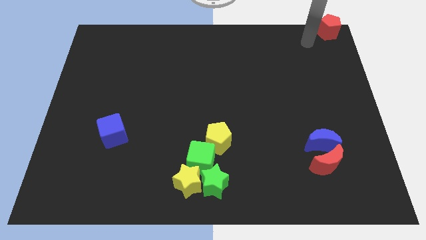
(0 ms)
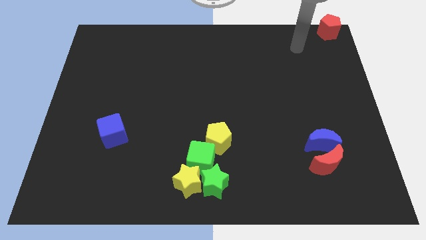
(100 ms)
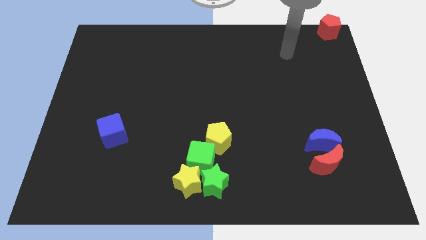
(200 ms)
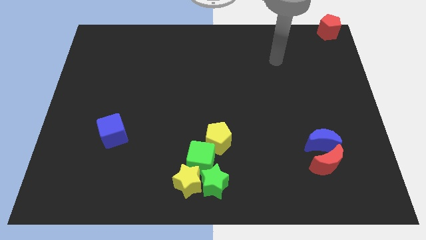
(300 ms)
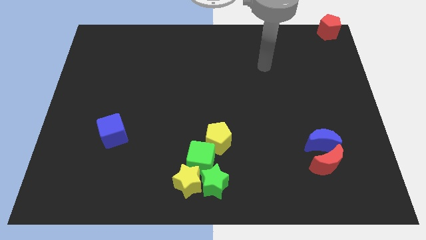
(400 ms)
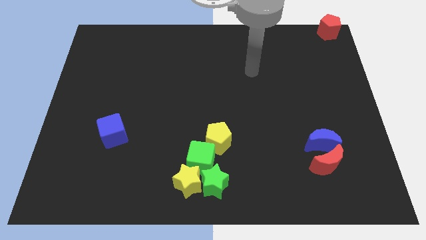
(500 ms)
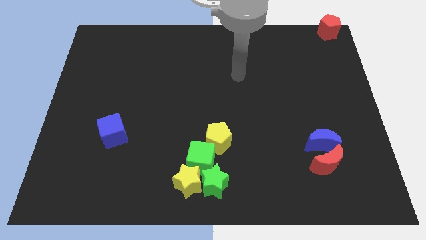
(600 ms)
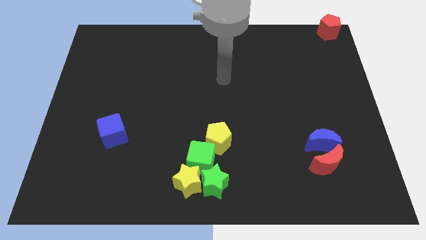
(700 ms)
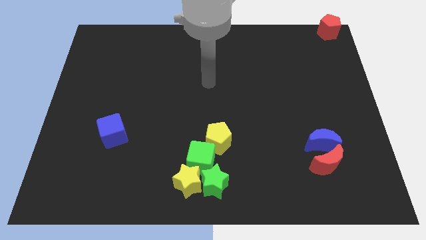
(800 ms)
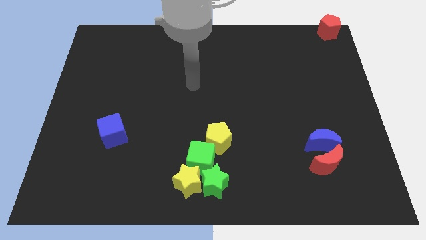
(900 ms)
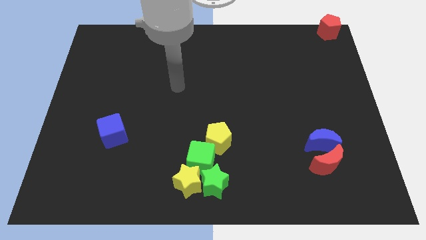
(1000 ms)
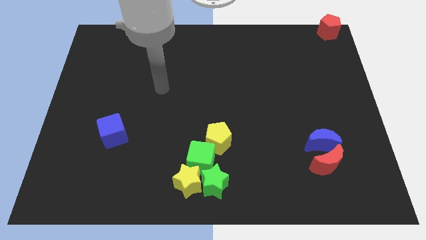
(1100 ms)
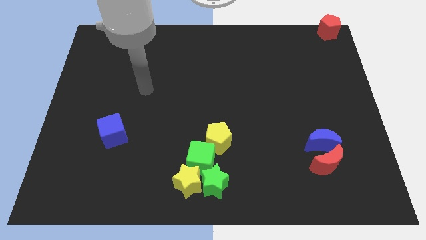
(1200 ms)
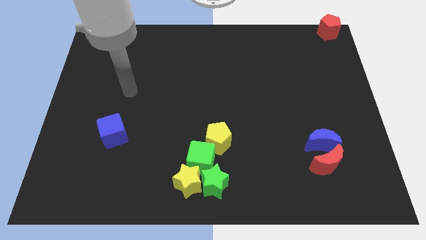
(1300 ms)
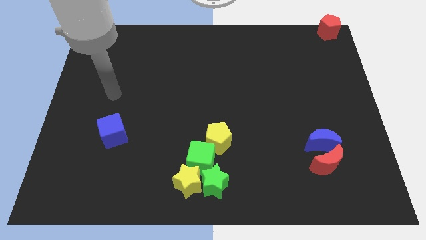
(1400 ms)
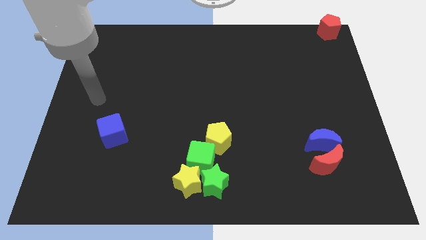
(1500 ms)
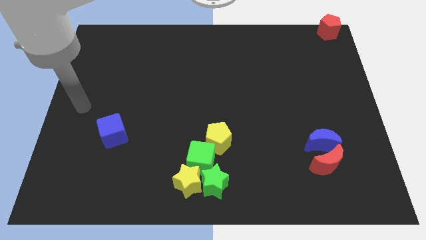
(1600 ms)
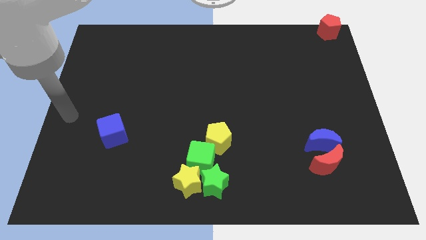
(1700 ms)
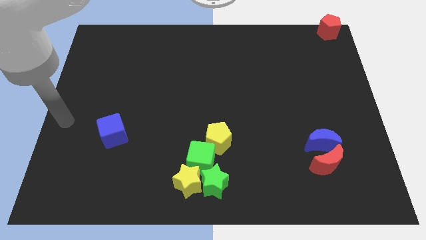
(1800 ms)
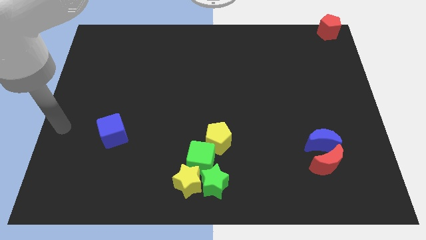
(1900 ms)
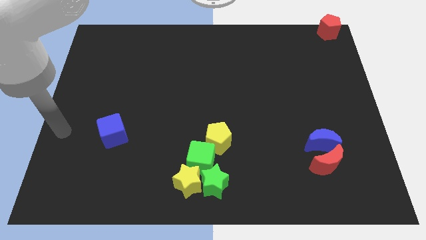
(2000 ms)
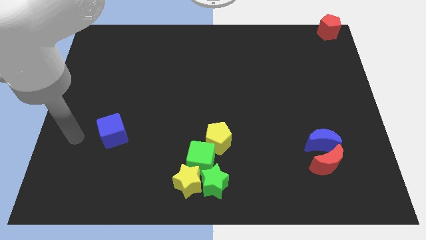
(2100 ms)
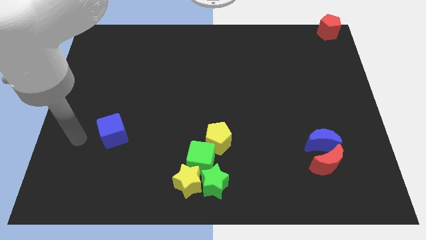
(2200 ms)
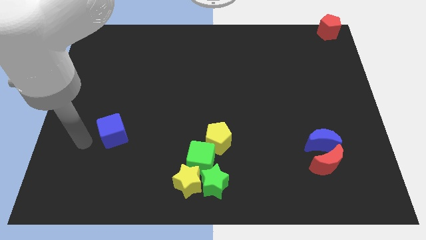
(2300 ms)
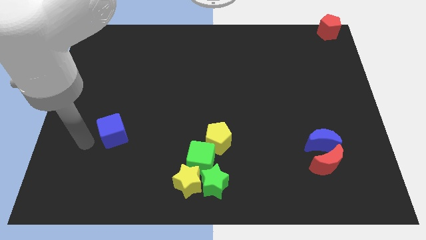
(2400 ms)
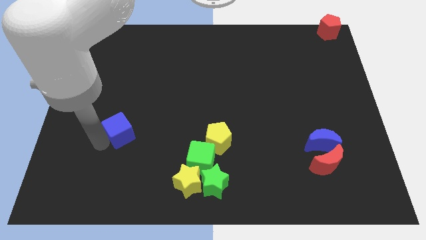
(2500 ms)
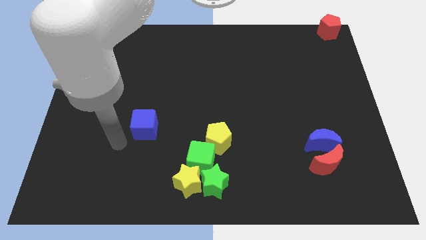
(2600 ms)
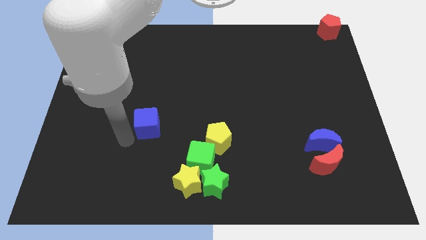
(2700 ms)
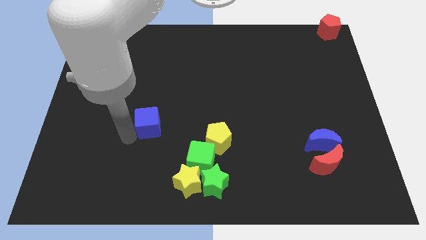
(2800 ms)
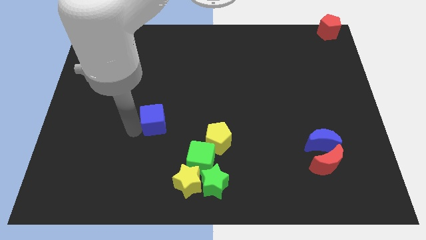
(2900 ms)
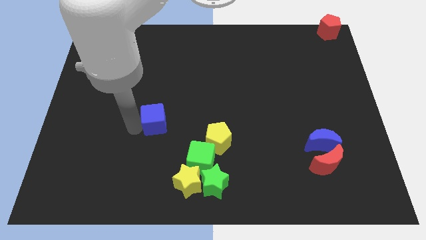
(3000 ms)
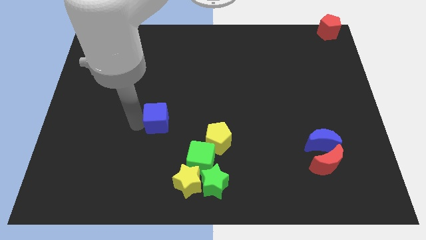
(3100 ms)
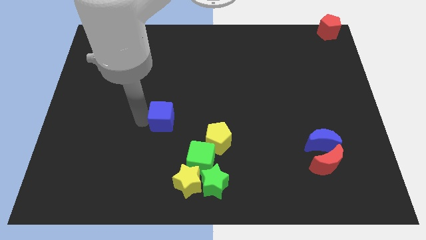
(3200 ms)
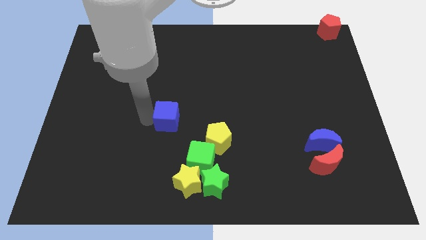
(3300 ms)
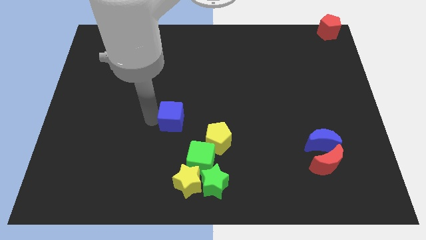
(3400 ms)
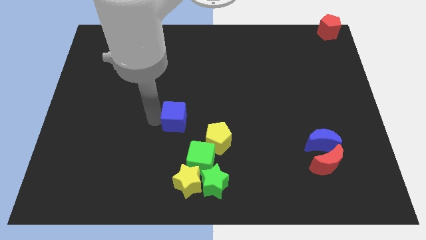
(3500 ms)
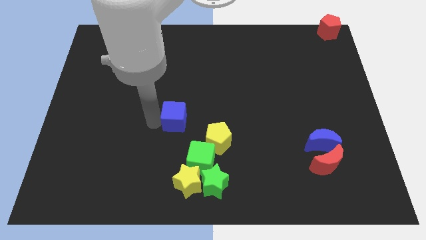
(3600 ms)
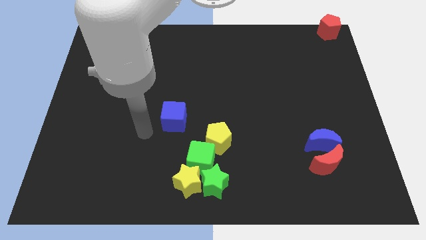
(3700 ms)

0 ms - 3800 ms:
push the blue cube to the right side of the board

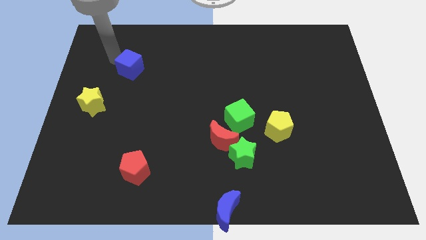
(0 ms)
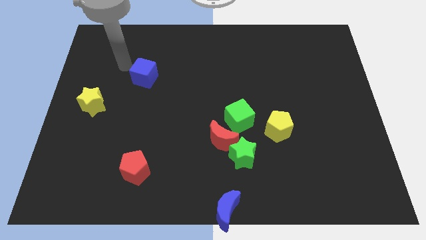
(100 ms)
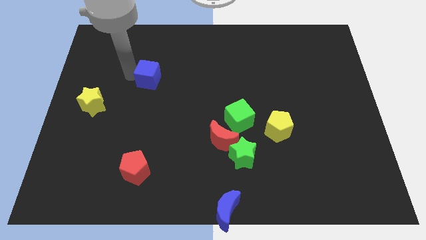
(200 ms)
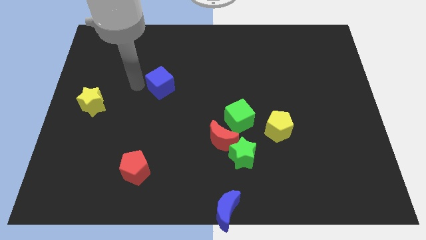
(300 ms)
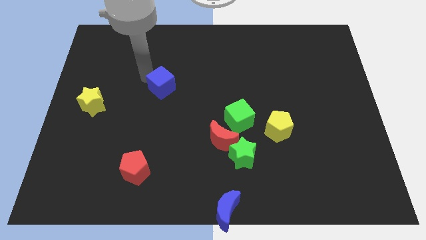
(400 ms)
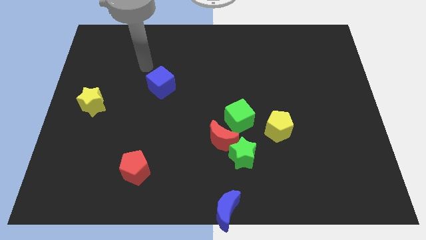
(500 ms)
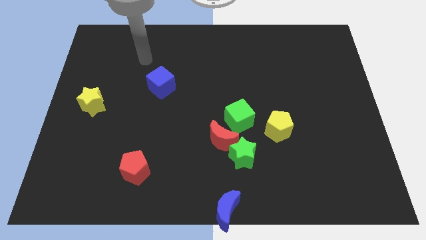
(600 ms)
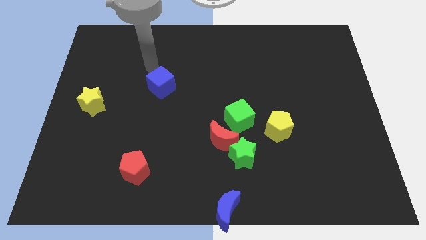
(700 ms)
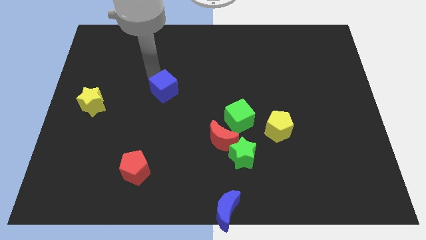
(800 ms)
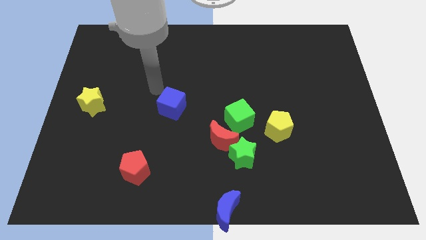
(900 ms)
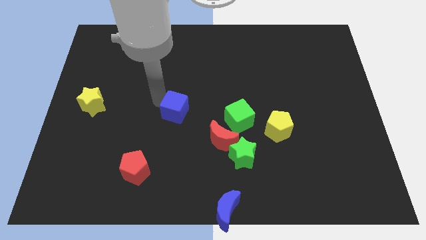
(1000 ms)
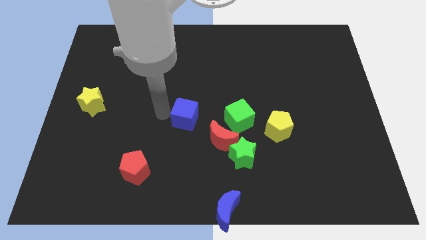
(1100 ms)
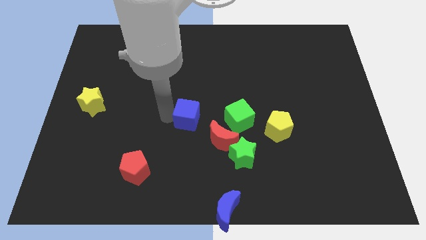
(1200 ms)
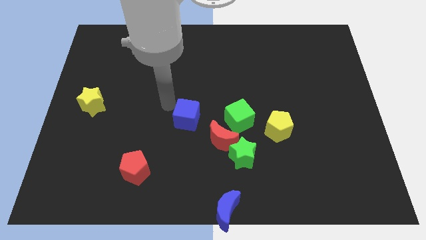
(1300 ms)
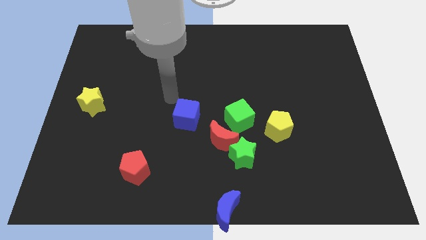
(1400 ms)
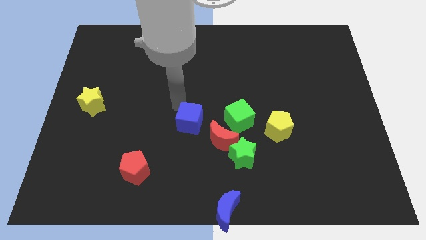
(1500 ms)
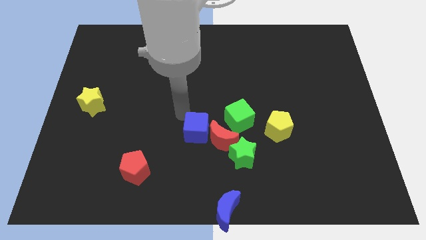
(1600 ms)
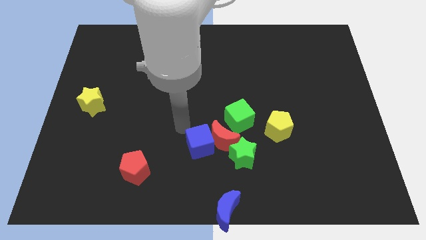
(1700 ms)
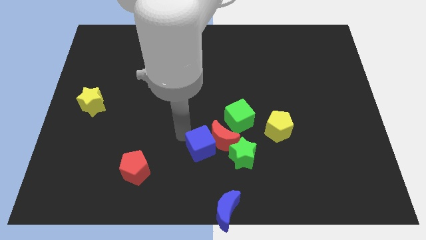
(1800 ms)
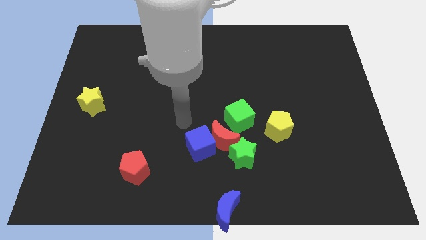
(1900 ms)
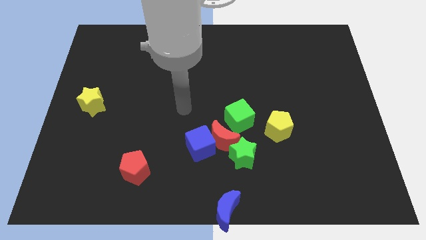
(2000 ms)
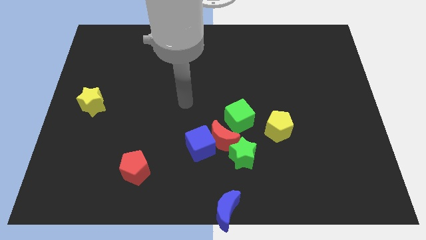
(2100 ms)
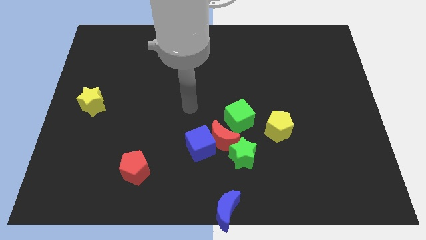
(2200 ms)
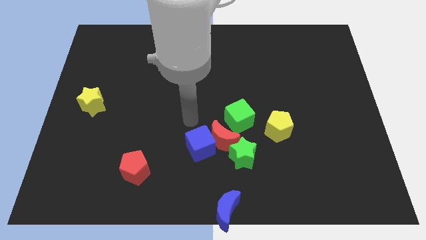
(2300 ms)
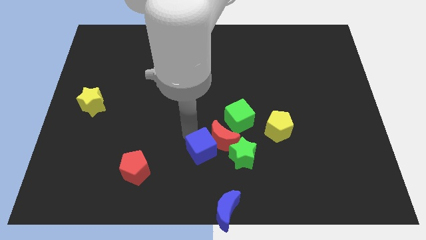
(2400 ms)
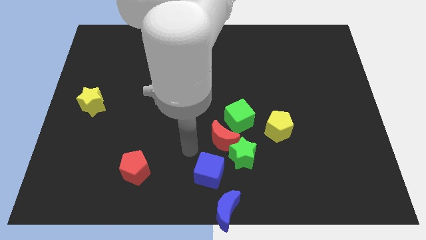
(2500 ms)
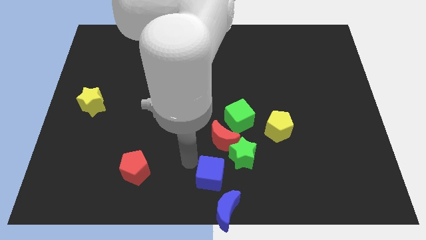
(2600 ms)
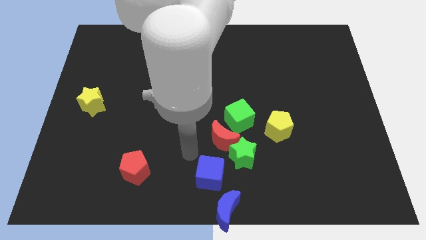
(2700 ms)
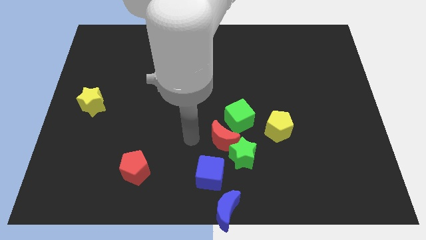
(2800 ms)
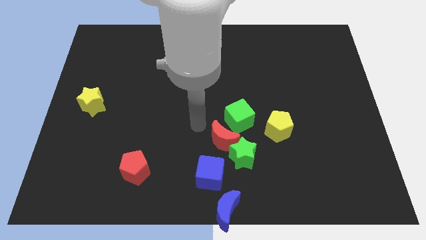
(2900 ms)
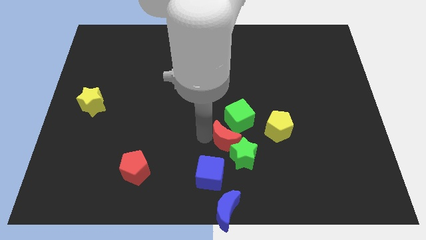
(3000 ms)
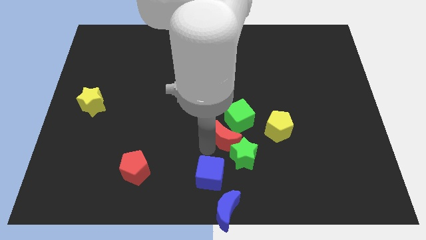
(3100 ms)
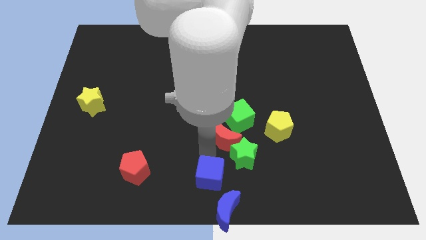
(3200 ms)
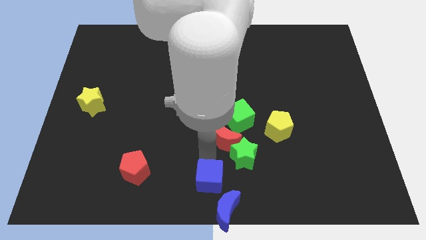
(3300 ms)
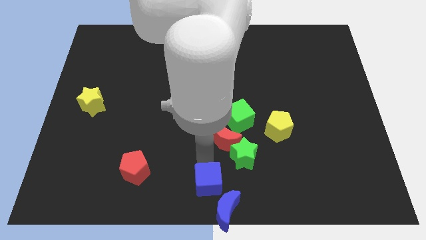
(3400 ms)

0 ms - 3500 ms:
move the blue cube above the blue moon

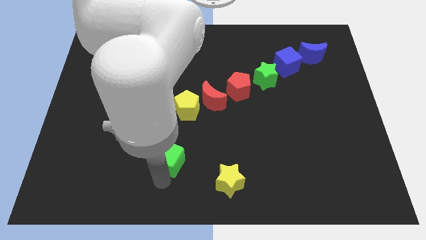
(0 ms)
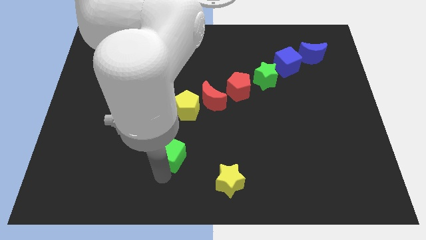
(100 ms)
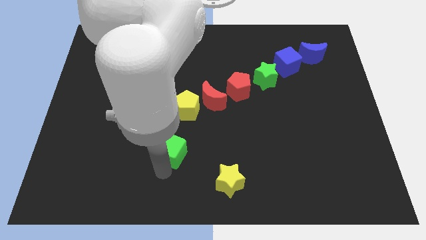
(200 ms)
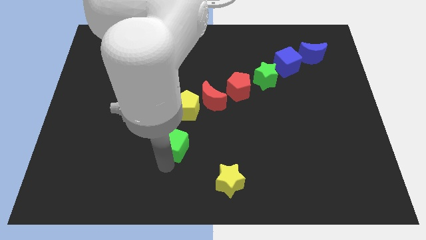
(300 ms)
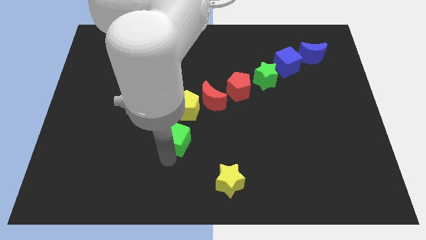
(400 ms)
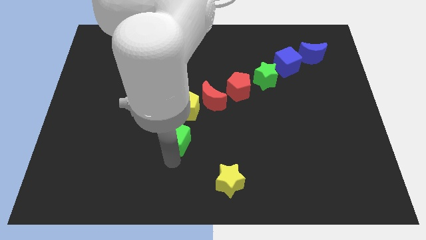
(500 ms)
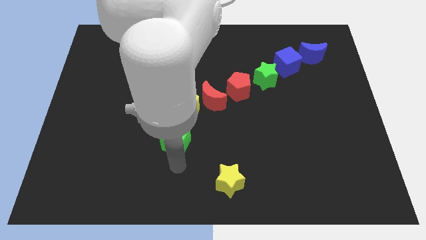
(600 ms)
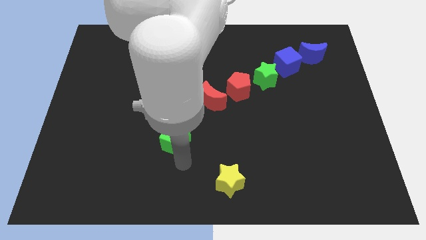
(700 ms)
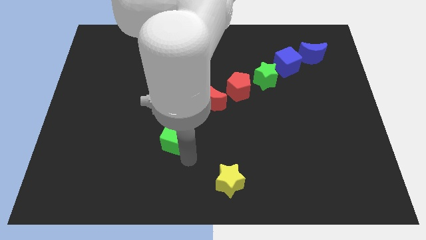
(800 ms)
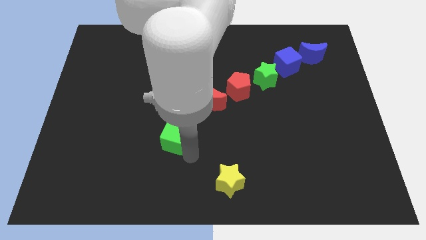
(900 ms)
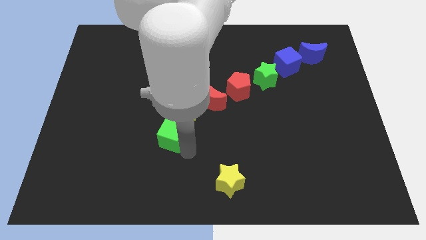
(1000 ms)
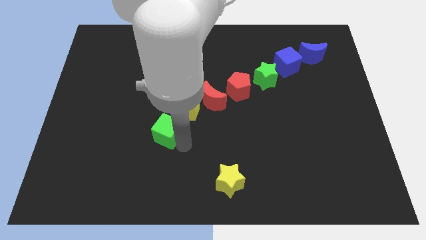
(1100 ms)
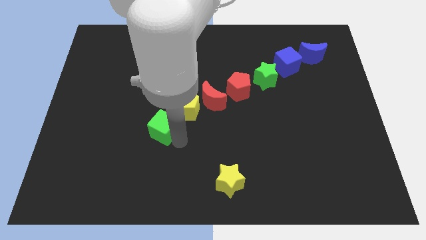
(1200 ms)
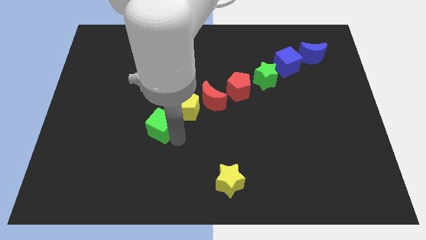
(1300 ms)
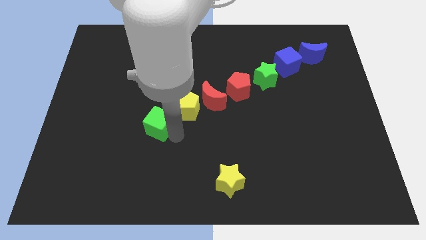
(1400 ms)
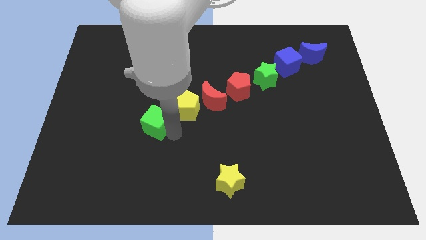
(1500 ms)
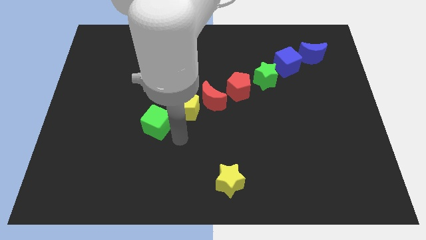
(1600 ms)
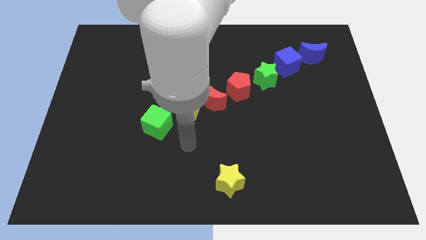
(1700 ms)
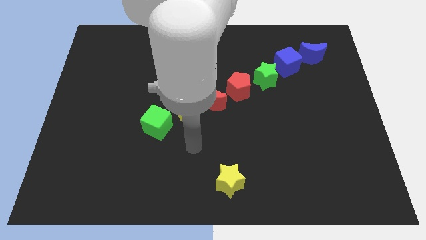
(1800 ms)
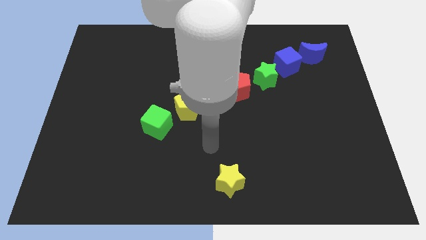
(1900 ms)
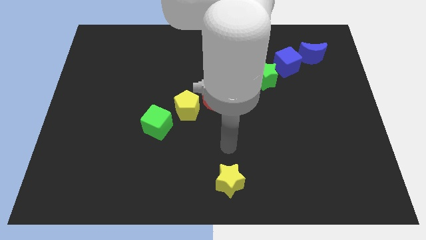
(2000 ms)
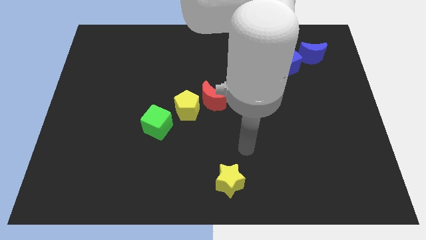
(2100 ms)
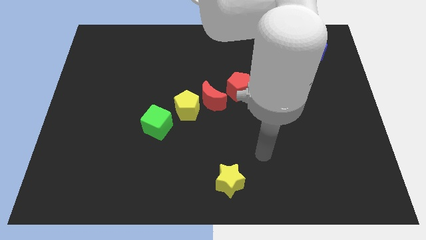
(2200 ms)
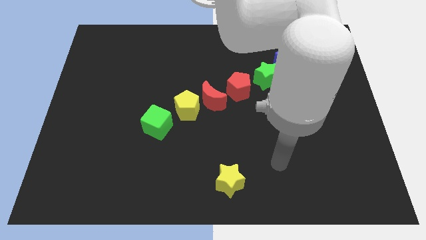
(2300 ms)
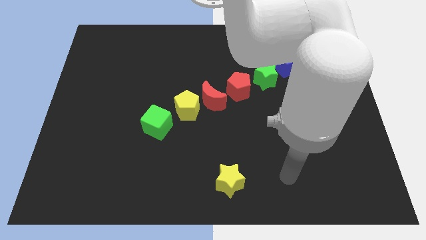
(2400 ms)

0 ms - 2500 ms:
place the green cube diagonally top left to yellow star
